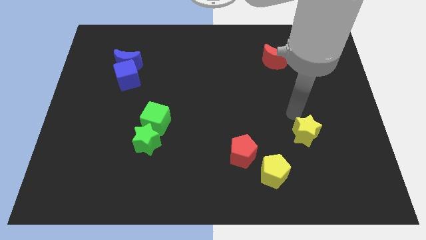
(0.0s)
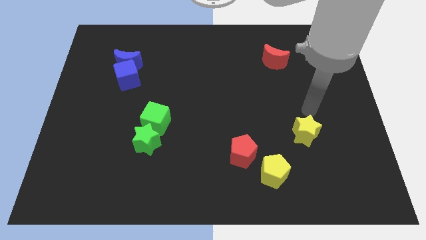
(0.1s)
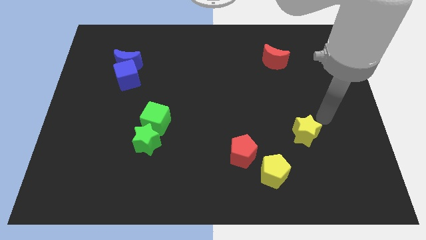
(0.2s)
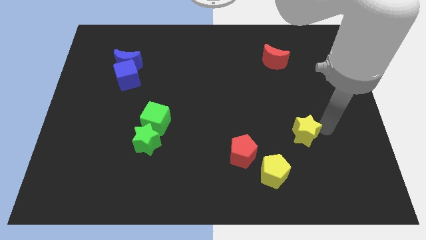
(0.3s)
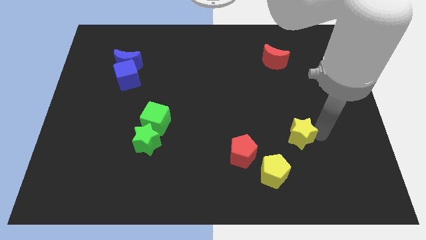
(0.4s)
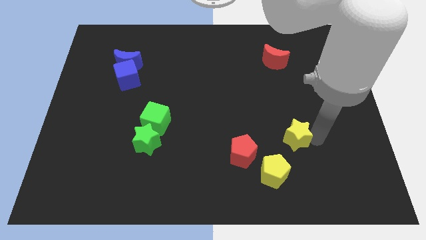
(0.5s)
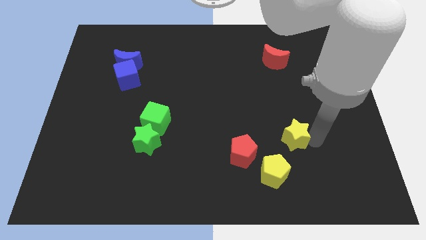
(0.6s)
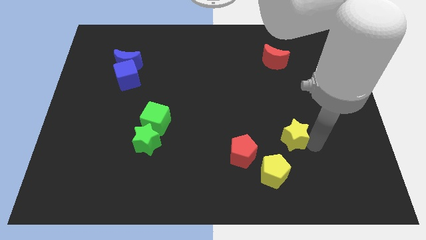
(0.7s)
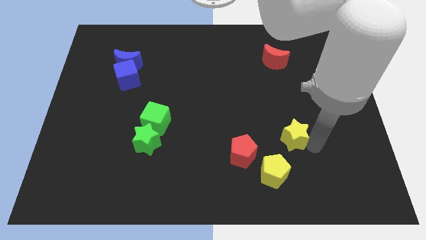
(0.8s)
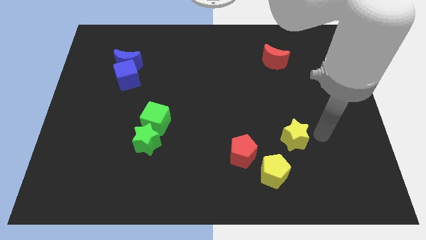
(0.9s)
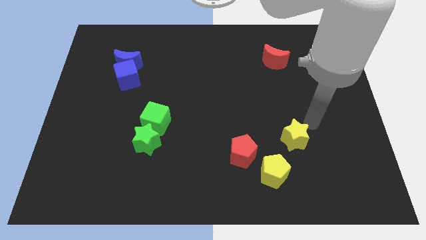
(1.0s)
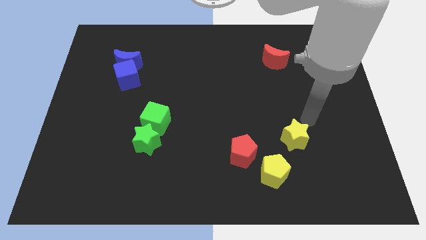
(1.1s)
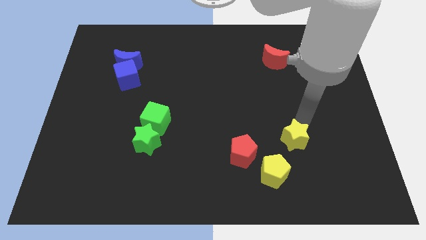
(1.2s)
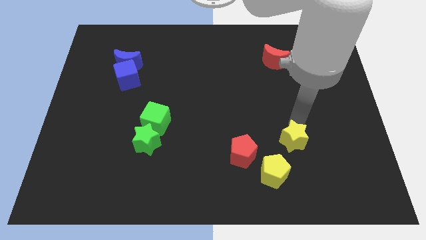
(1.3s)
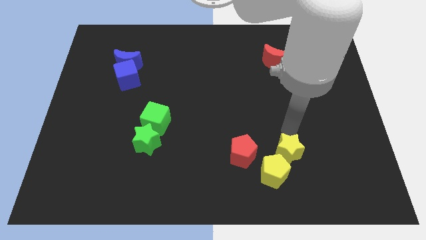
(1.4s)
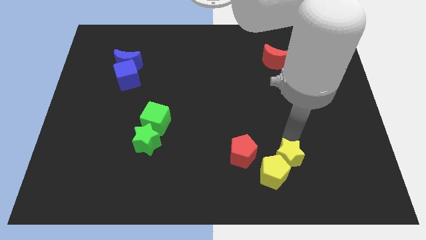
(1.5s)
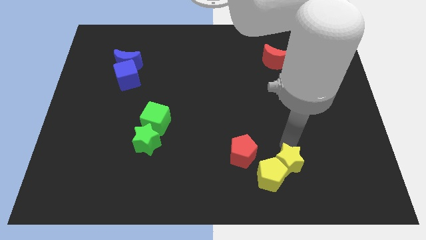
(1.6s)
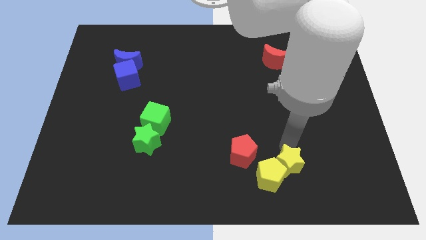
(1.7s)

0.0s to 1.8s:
move the yellow star into the yellow pentagon

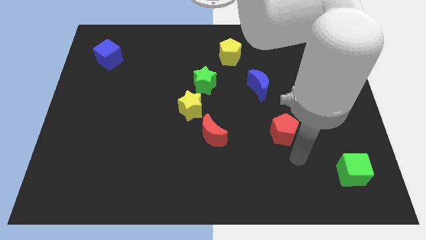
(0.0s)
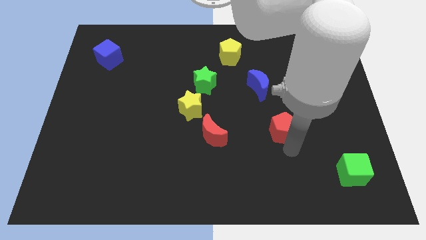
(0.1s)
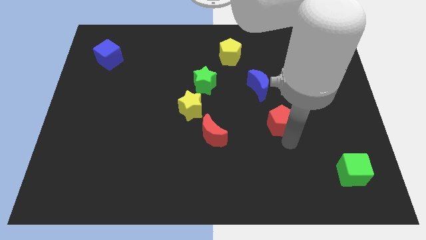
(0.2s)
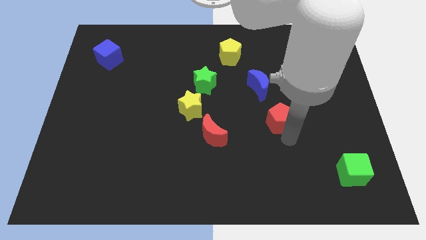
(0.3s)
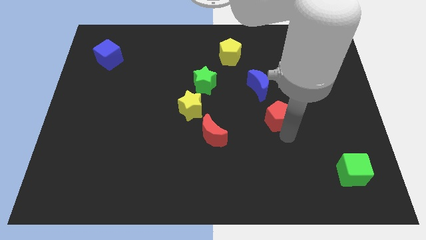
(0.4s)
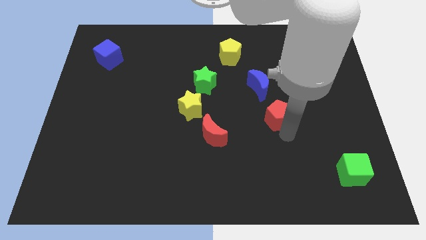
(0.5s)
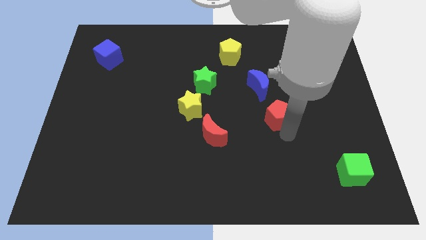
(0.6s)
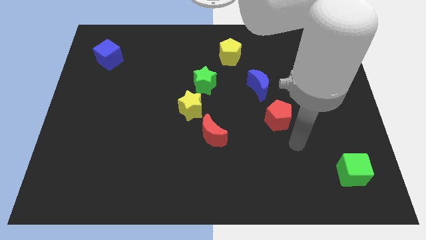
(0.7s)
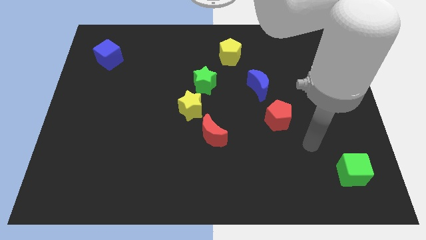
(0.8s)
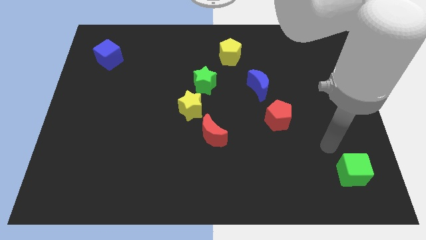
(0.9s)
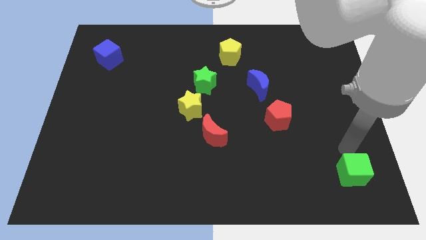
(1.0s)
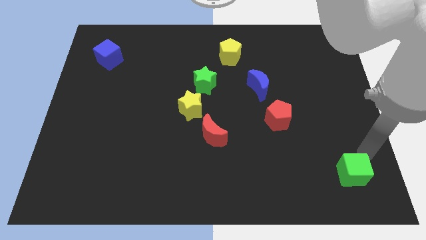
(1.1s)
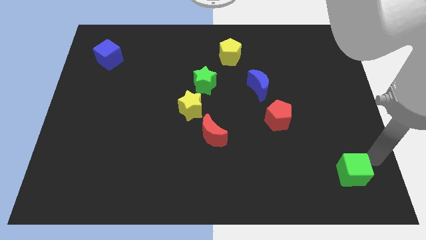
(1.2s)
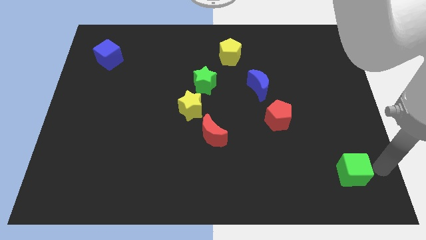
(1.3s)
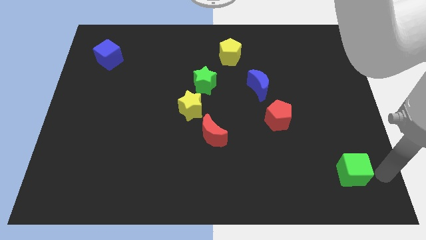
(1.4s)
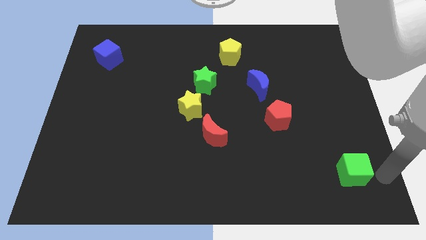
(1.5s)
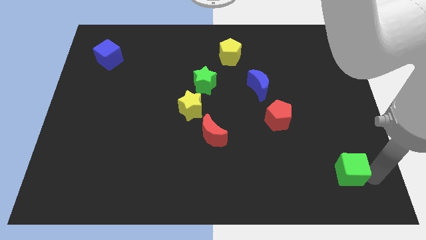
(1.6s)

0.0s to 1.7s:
place the arm to the right of the green cube

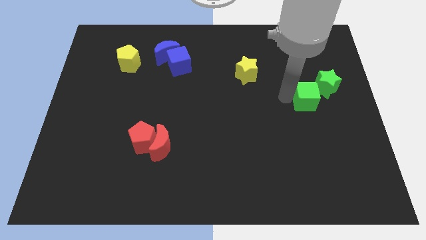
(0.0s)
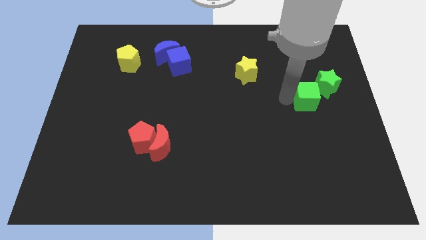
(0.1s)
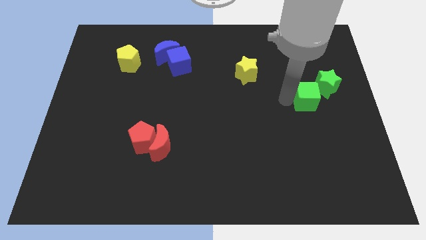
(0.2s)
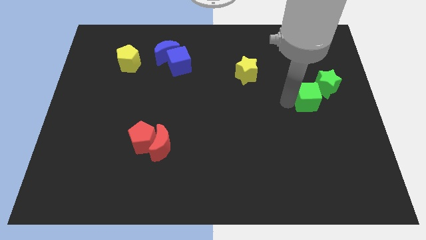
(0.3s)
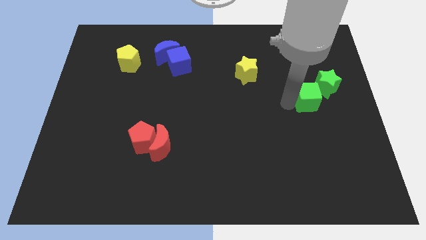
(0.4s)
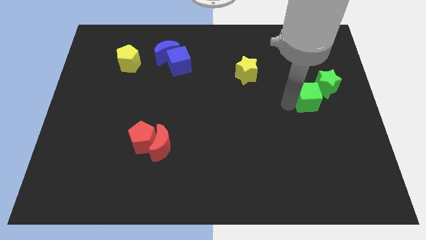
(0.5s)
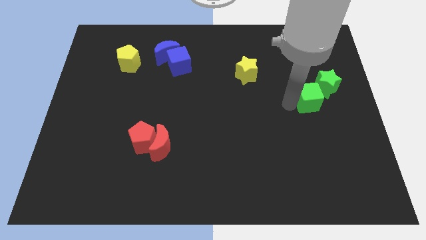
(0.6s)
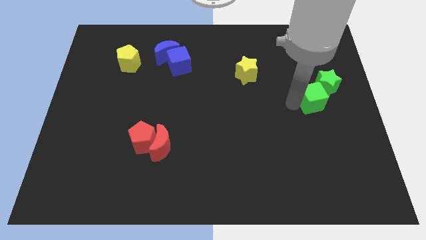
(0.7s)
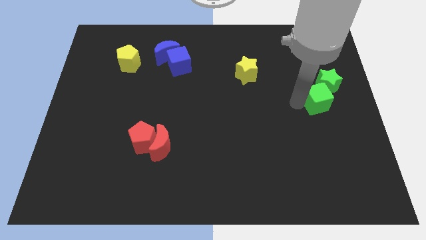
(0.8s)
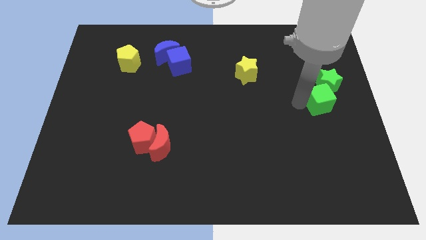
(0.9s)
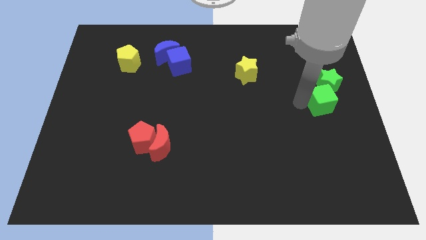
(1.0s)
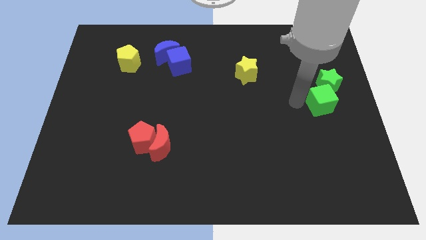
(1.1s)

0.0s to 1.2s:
push the green cube down to the green star

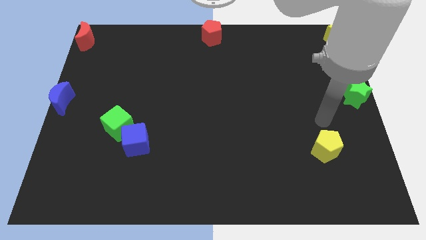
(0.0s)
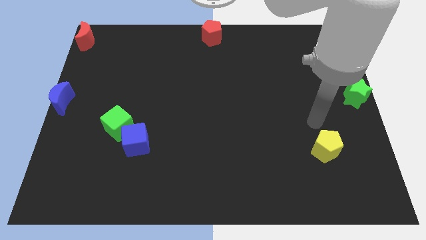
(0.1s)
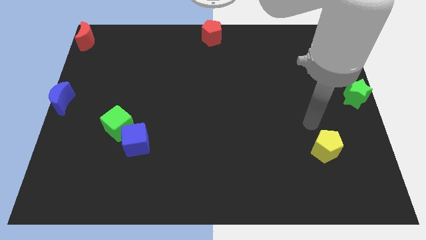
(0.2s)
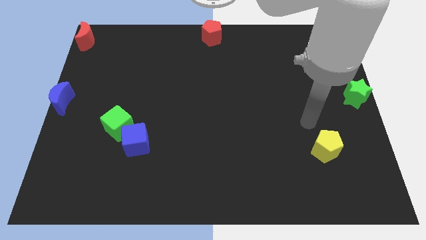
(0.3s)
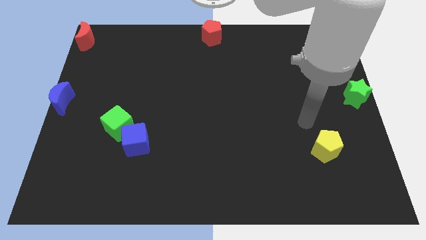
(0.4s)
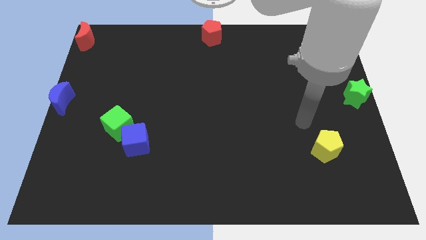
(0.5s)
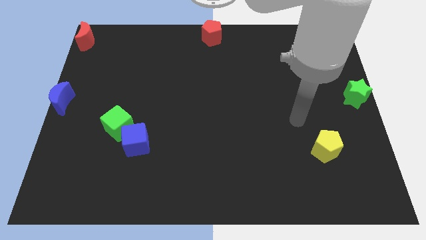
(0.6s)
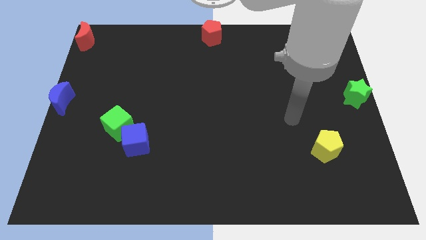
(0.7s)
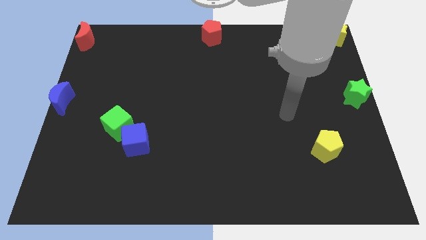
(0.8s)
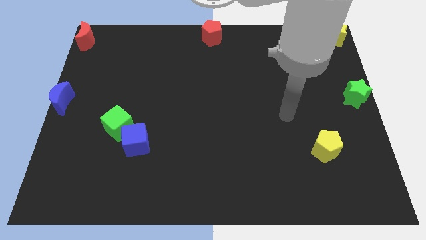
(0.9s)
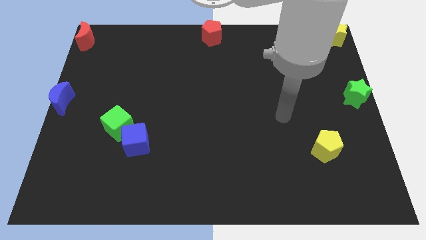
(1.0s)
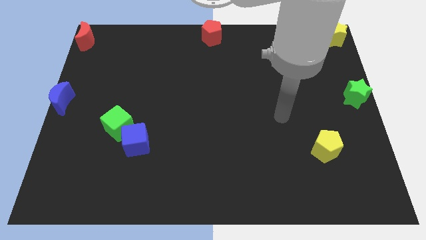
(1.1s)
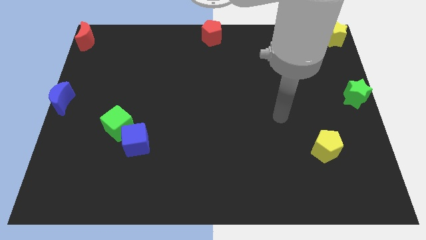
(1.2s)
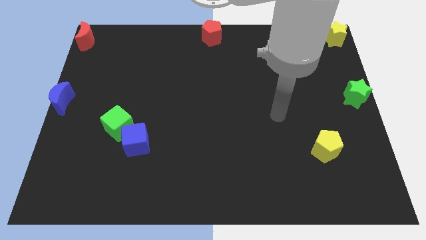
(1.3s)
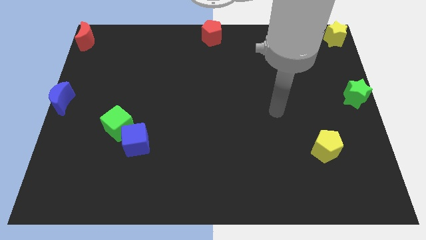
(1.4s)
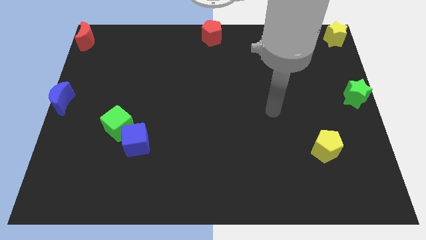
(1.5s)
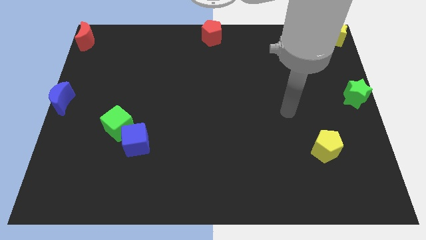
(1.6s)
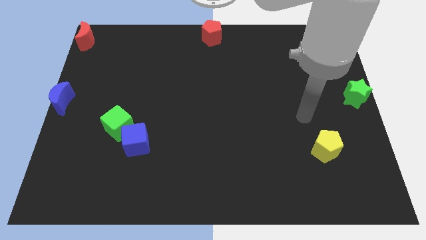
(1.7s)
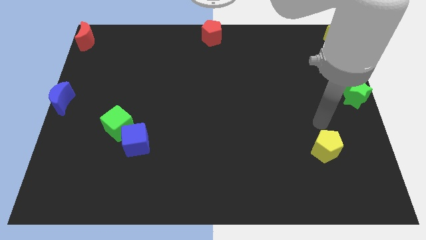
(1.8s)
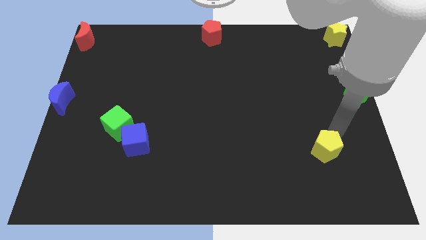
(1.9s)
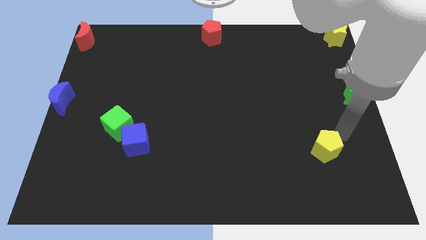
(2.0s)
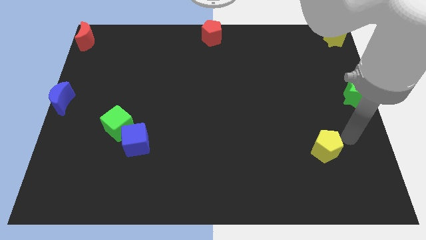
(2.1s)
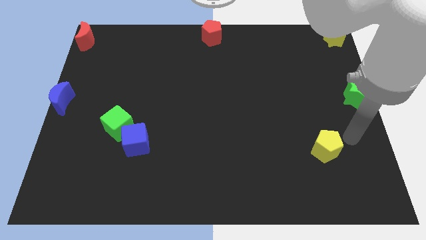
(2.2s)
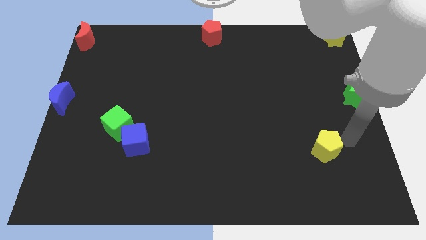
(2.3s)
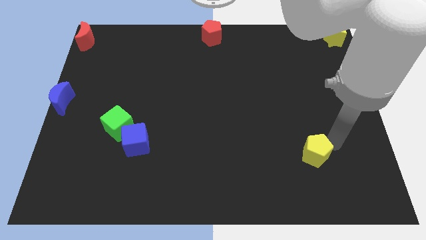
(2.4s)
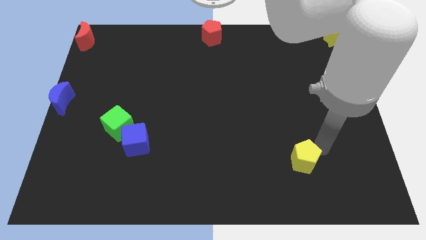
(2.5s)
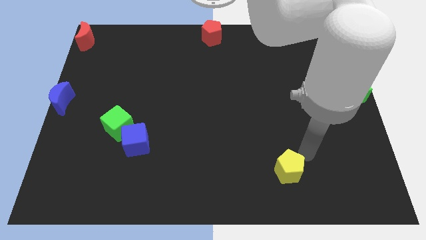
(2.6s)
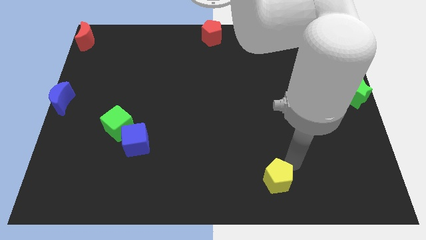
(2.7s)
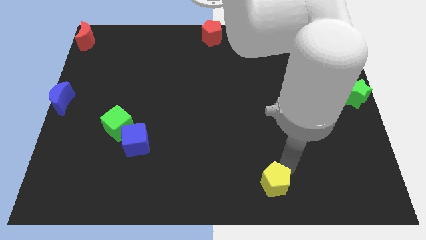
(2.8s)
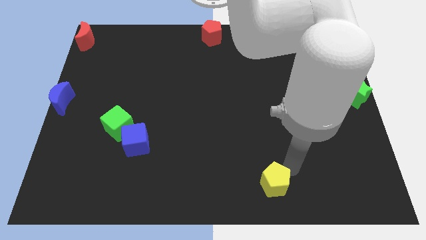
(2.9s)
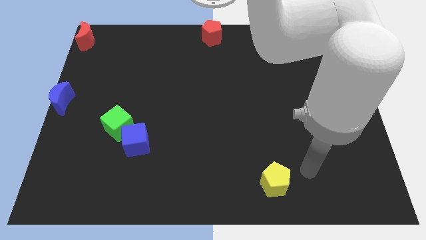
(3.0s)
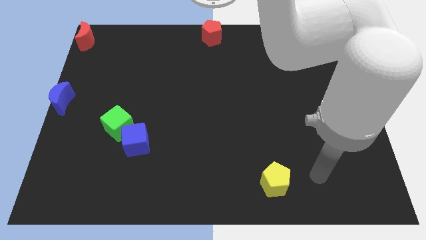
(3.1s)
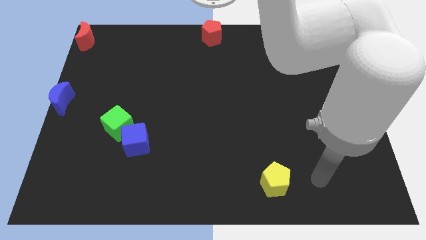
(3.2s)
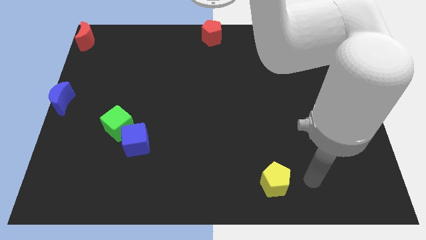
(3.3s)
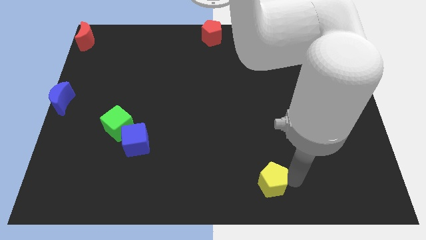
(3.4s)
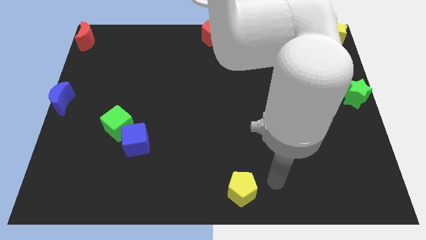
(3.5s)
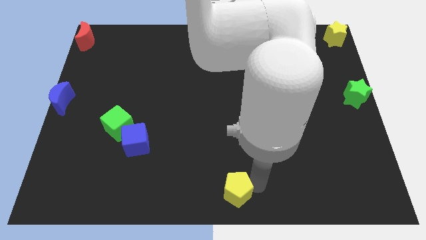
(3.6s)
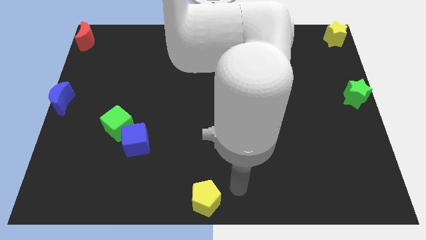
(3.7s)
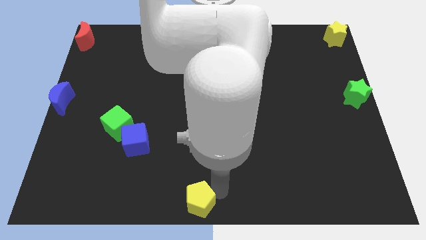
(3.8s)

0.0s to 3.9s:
move the yellow pentagon to the bottom center of the board

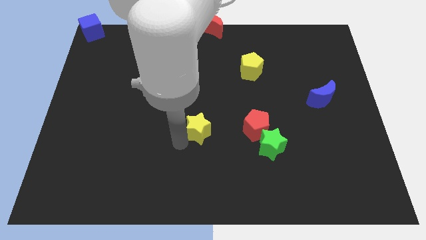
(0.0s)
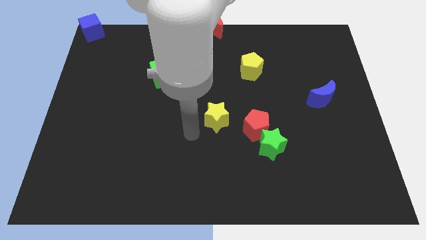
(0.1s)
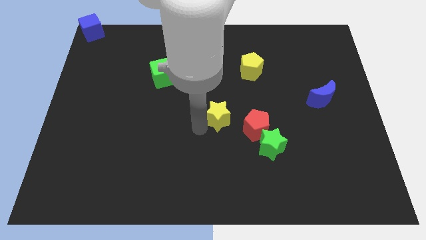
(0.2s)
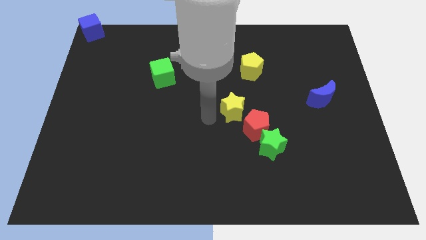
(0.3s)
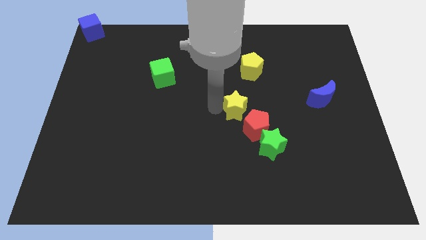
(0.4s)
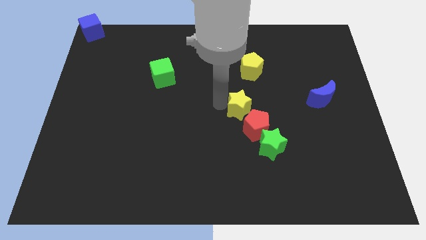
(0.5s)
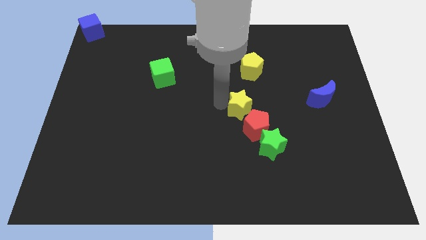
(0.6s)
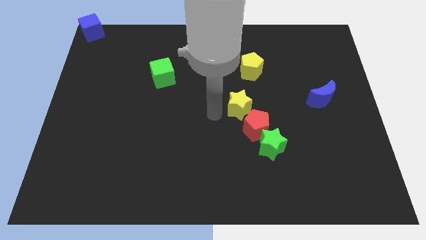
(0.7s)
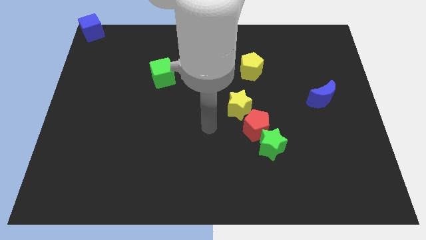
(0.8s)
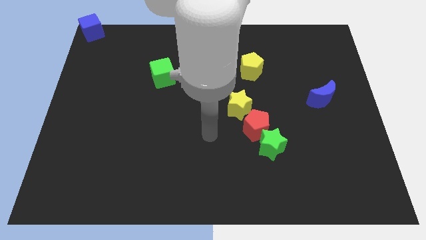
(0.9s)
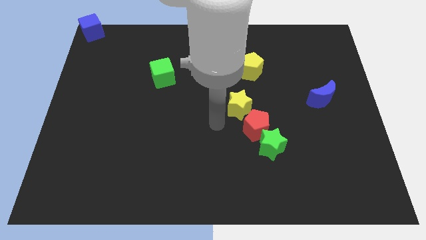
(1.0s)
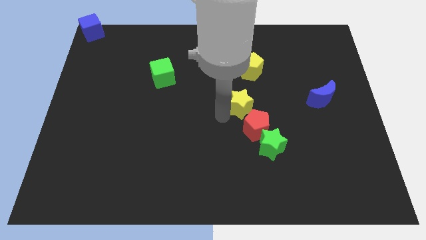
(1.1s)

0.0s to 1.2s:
move the yellow star diagonal to the red pentagon
